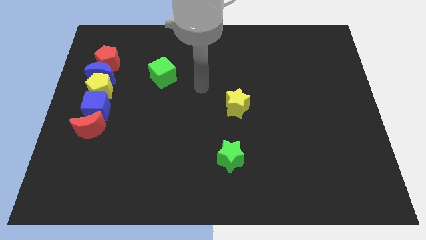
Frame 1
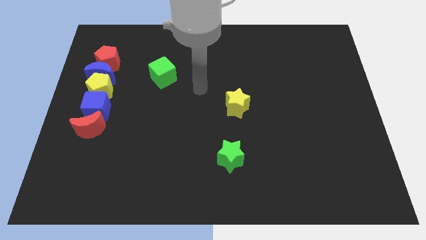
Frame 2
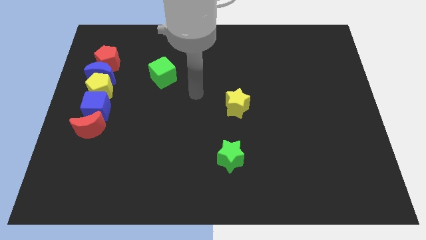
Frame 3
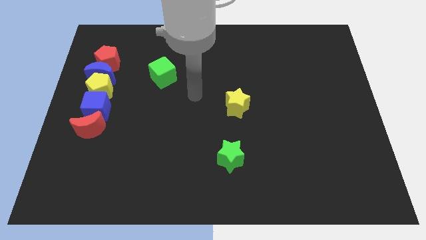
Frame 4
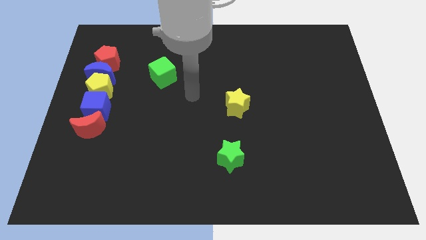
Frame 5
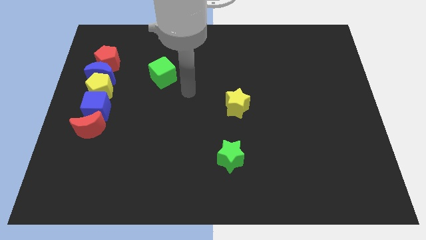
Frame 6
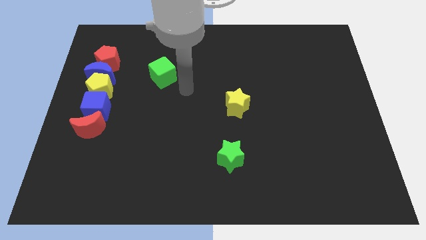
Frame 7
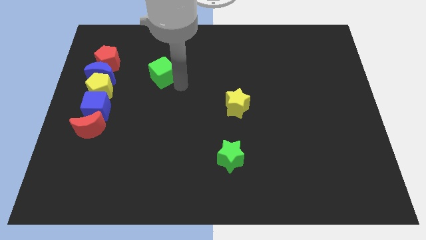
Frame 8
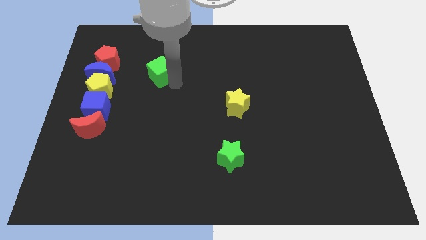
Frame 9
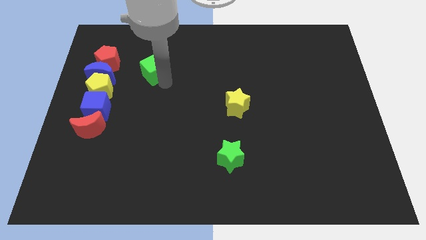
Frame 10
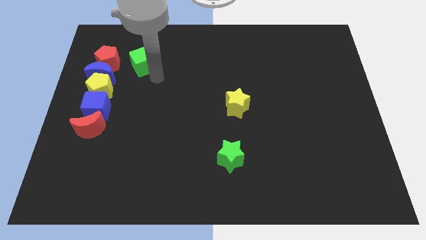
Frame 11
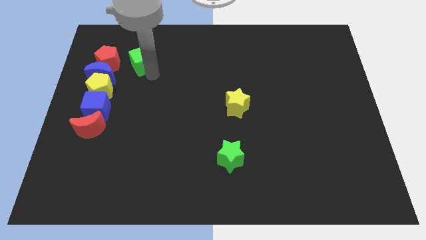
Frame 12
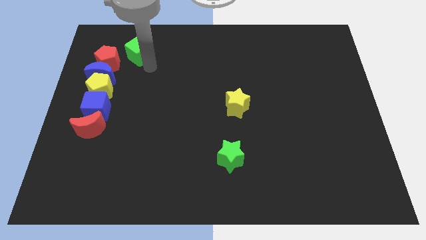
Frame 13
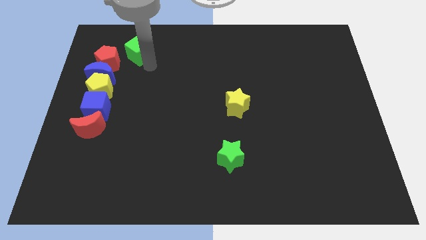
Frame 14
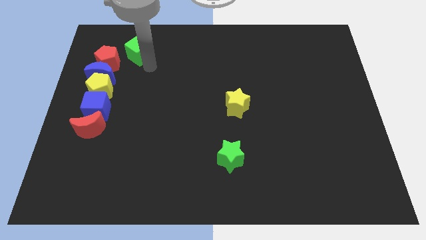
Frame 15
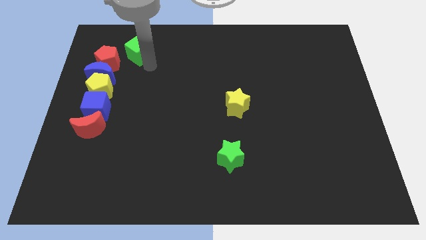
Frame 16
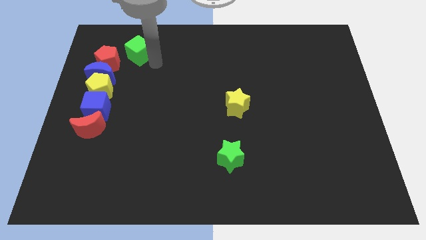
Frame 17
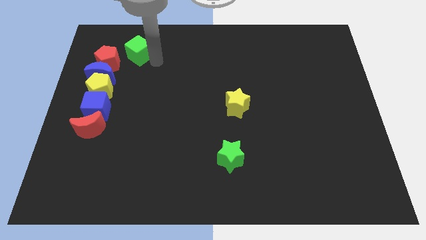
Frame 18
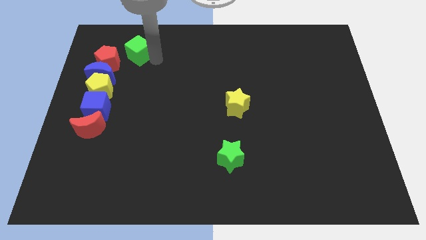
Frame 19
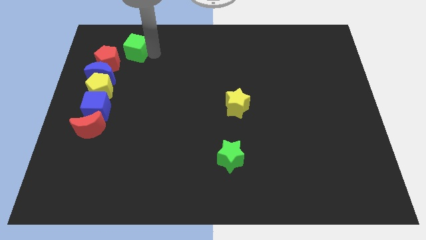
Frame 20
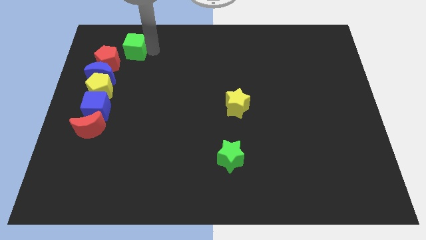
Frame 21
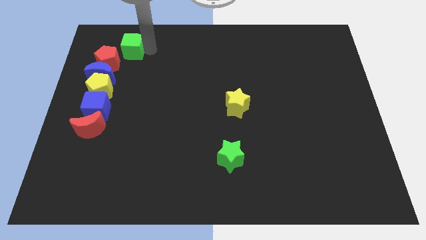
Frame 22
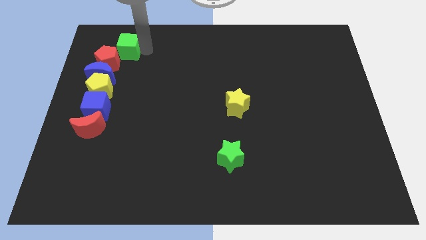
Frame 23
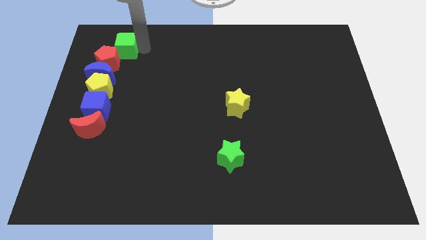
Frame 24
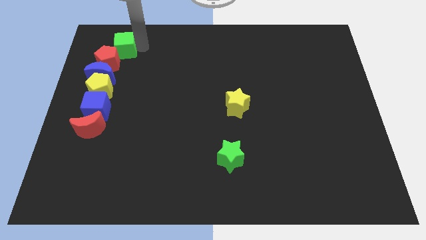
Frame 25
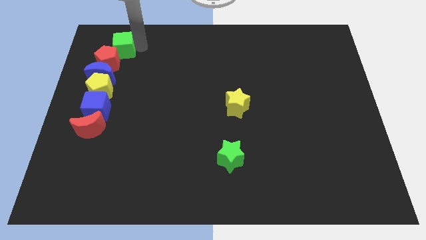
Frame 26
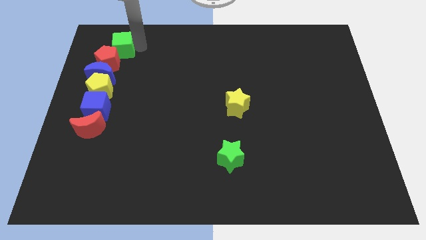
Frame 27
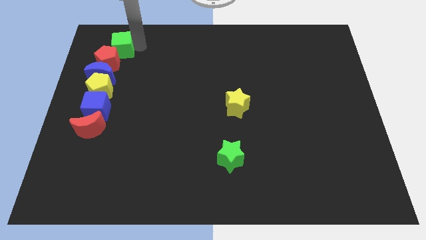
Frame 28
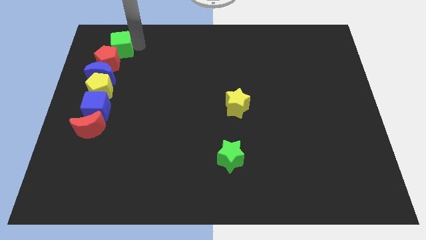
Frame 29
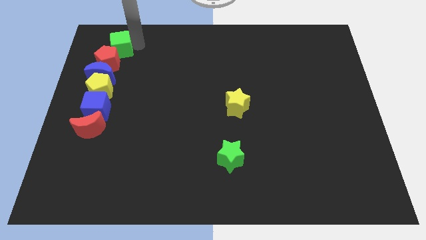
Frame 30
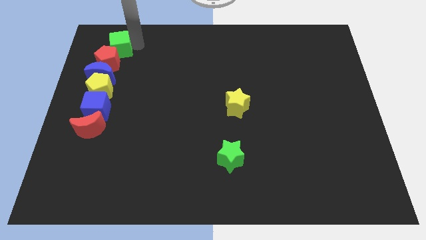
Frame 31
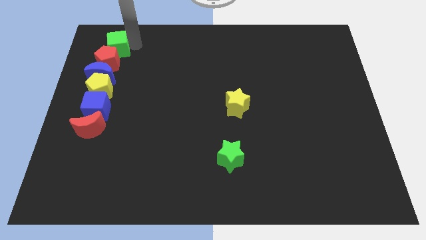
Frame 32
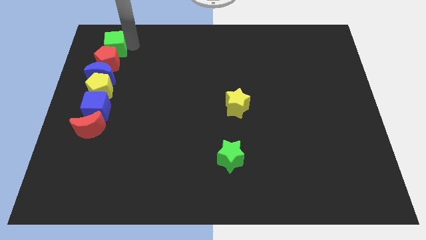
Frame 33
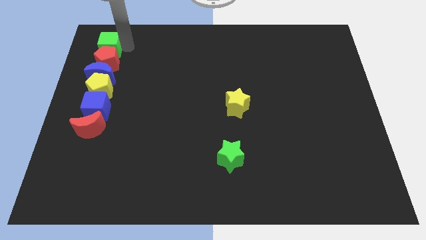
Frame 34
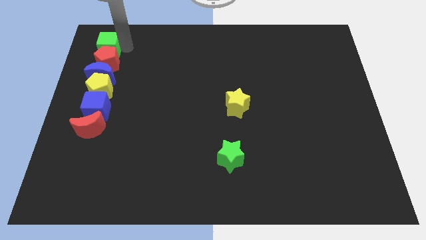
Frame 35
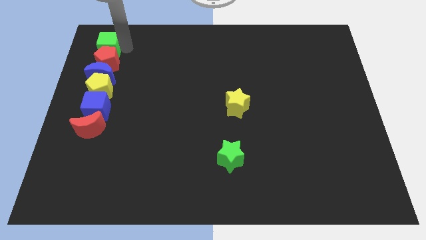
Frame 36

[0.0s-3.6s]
place the green cube above to the red pentagon

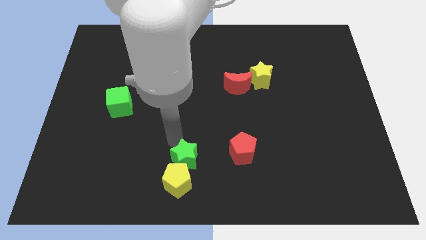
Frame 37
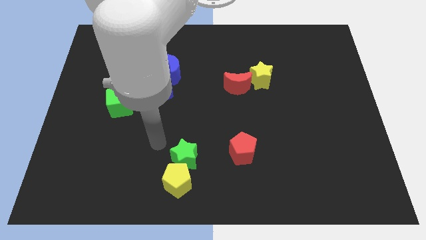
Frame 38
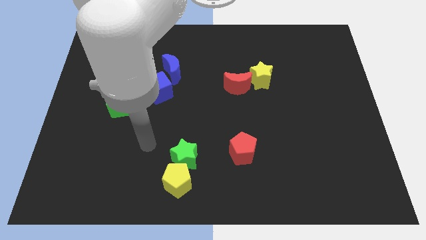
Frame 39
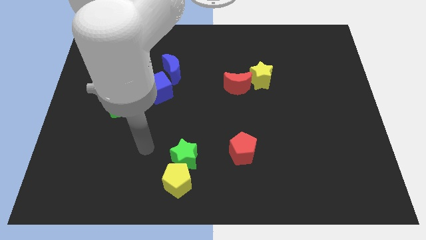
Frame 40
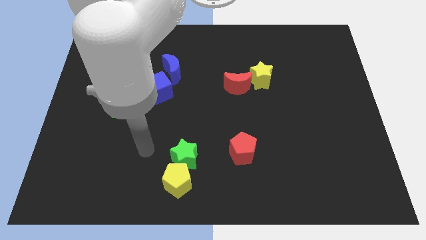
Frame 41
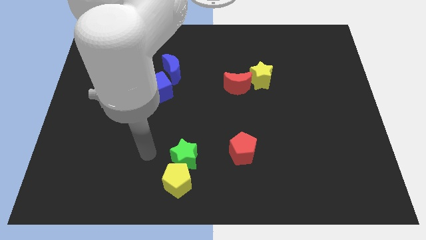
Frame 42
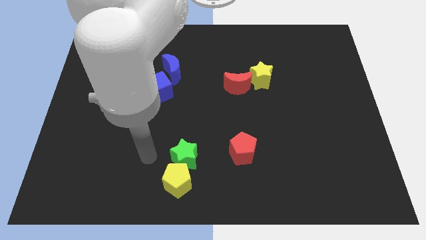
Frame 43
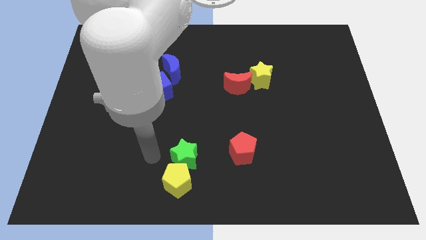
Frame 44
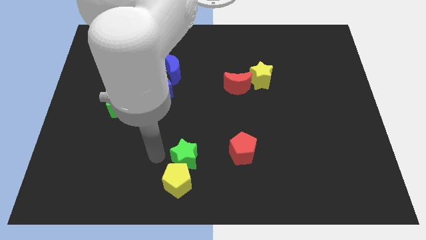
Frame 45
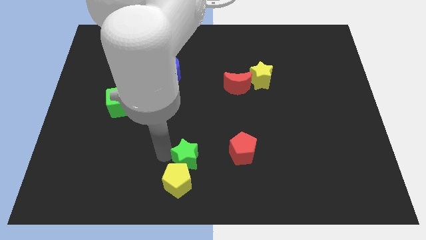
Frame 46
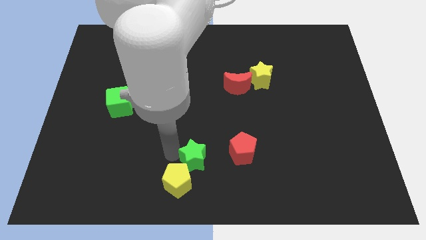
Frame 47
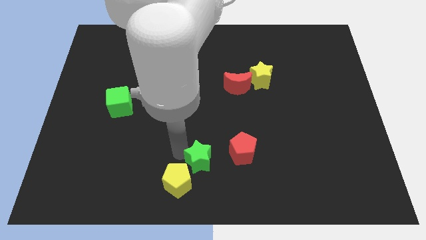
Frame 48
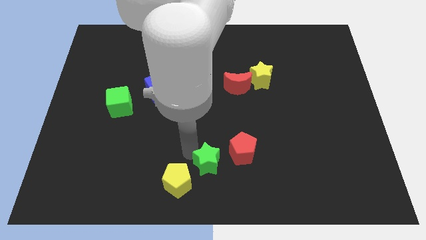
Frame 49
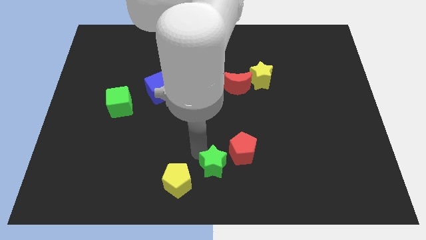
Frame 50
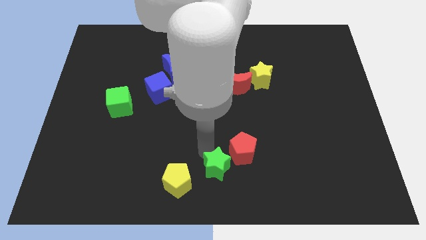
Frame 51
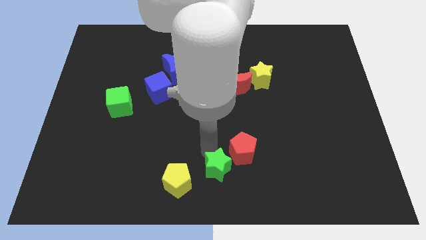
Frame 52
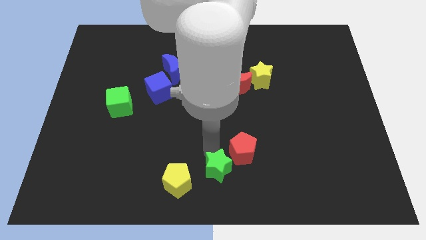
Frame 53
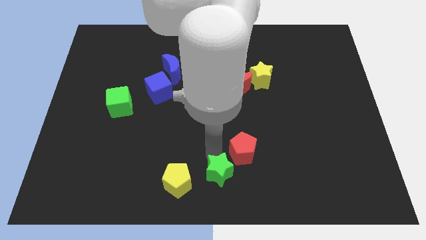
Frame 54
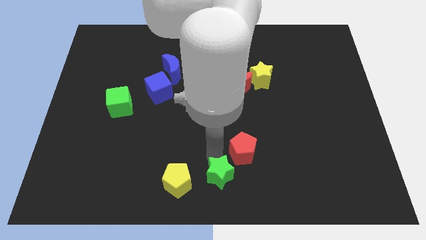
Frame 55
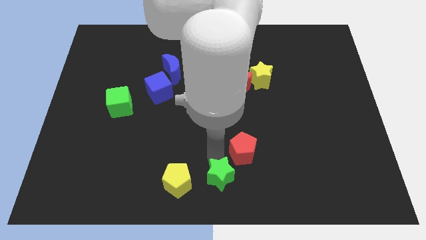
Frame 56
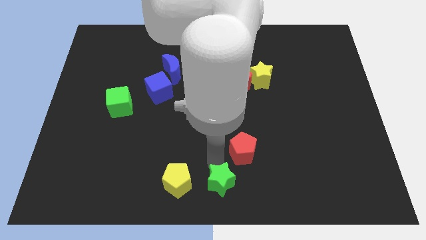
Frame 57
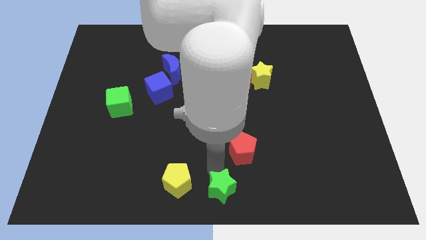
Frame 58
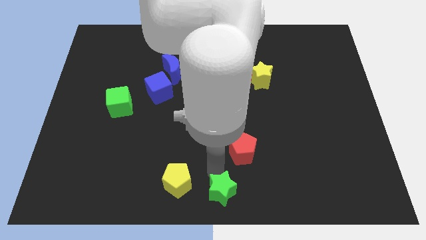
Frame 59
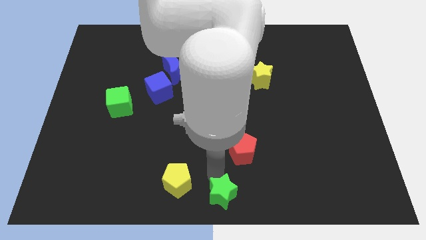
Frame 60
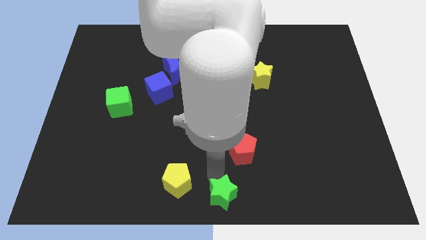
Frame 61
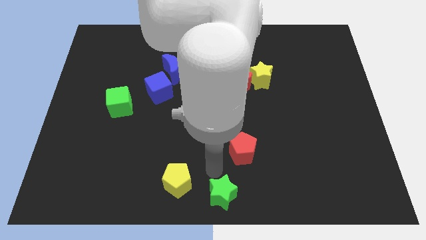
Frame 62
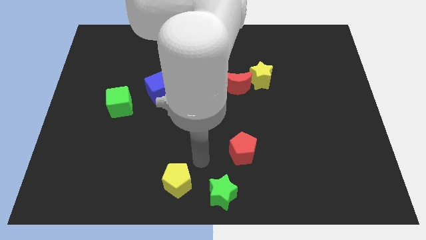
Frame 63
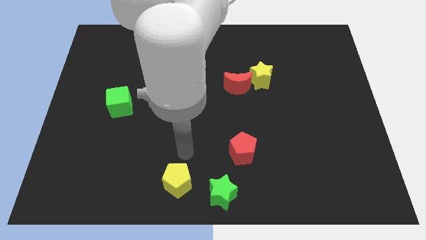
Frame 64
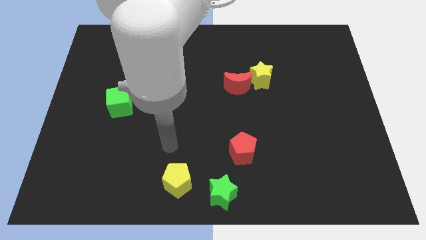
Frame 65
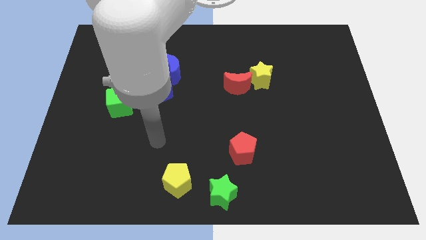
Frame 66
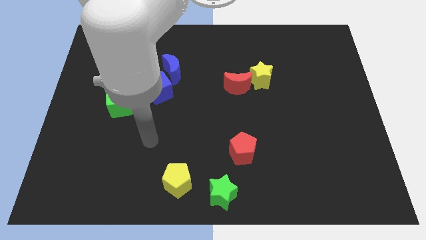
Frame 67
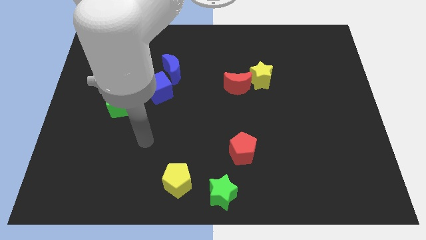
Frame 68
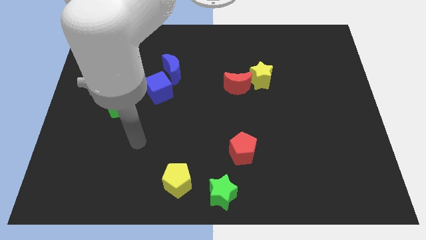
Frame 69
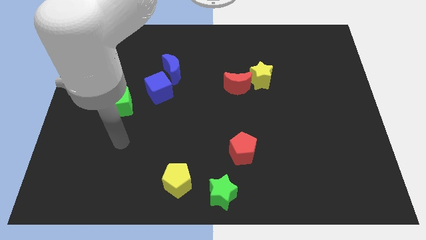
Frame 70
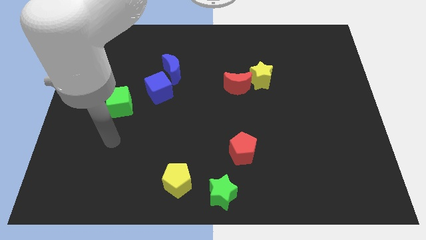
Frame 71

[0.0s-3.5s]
separate the yellow pentagon and green star

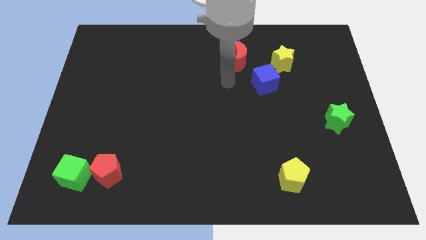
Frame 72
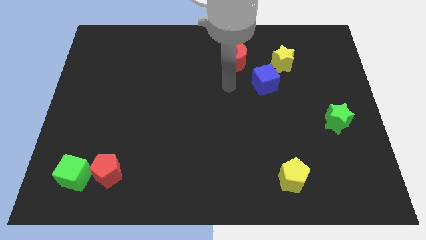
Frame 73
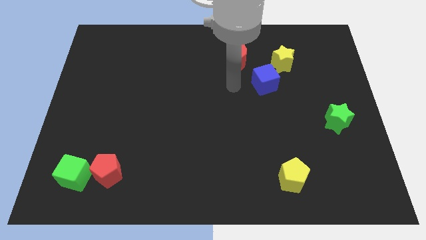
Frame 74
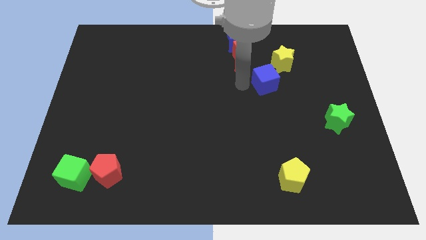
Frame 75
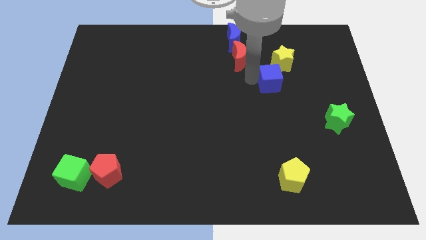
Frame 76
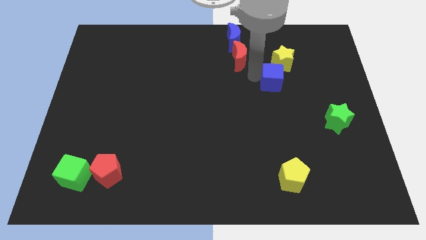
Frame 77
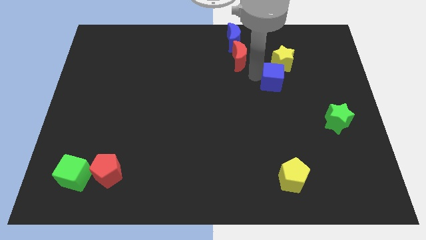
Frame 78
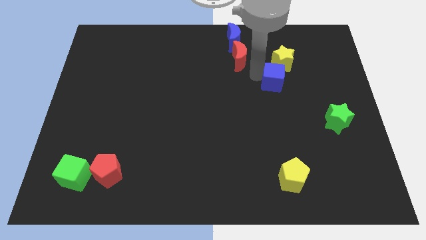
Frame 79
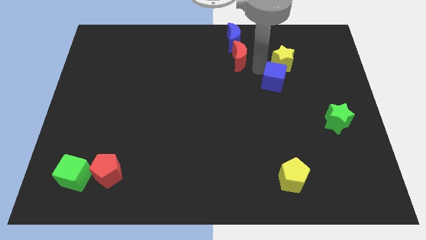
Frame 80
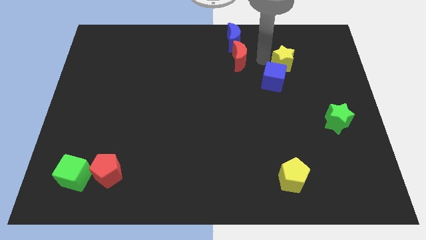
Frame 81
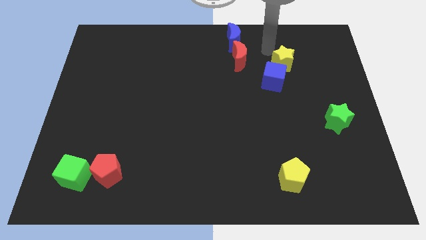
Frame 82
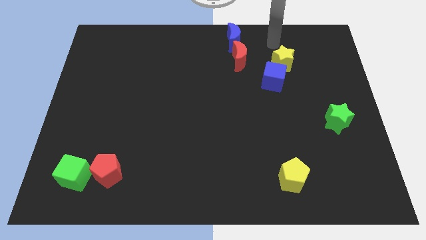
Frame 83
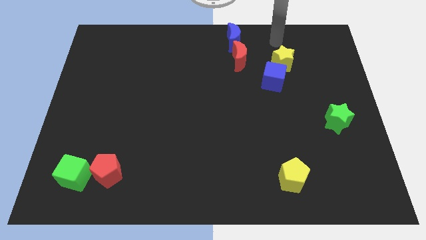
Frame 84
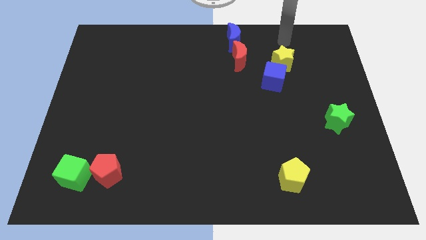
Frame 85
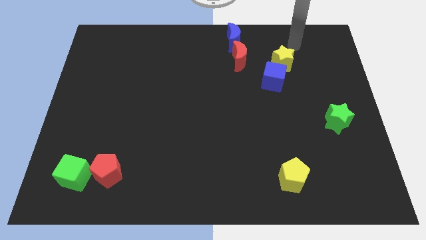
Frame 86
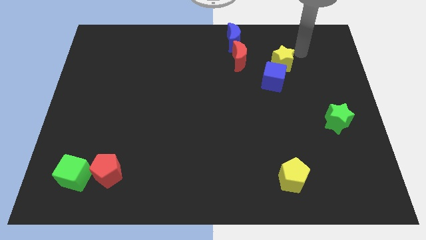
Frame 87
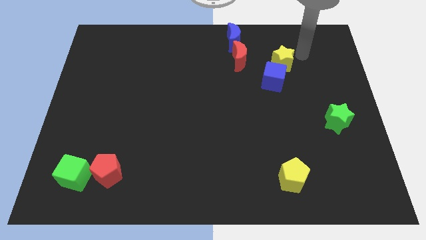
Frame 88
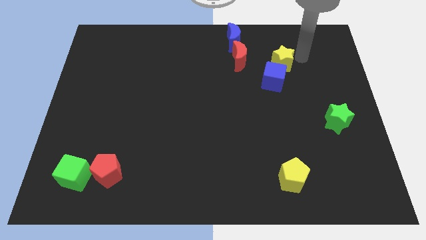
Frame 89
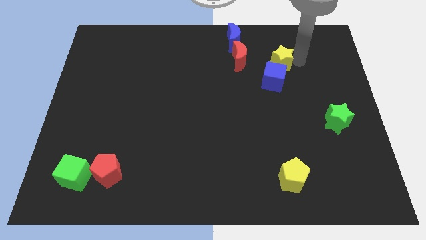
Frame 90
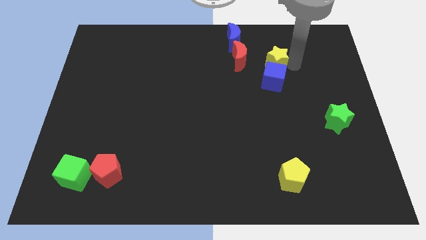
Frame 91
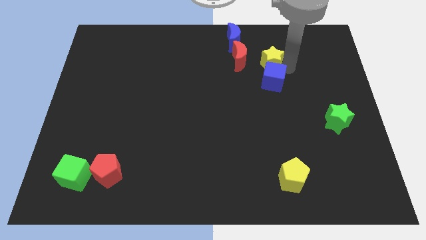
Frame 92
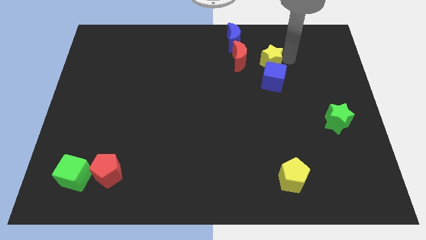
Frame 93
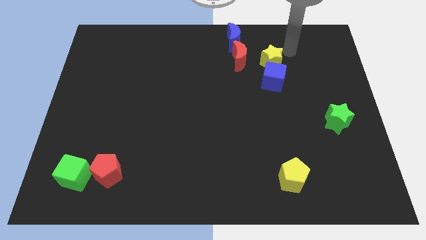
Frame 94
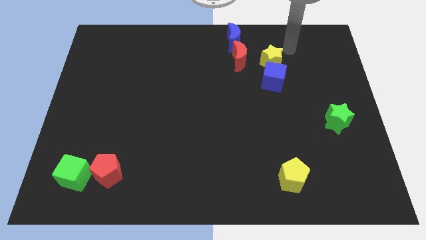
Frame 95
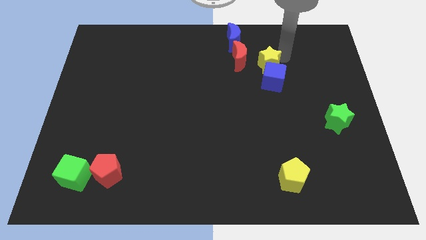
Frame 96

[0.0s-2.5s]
slightly drag the blue cube towards the yellow star
